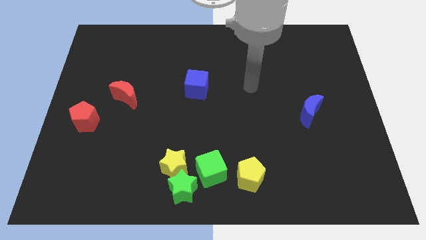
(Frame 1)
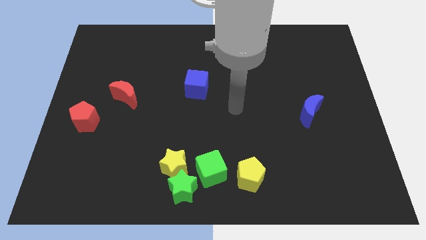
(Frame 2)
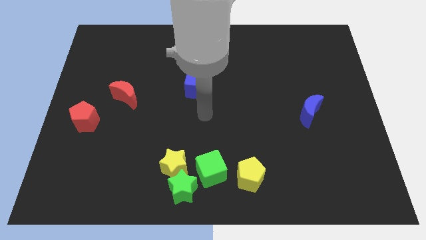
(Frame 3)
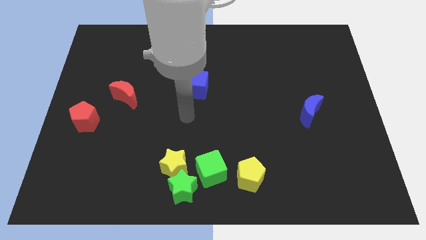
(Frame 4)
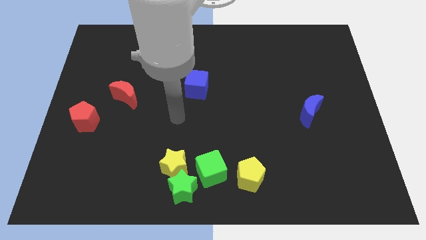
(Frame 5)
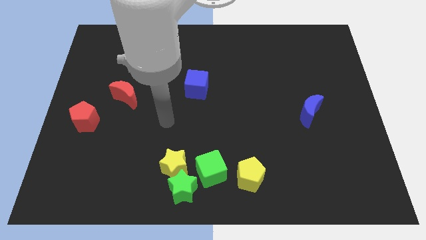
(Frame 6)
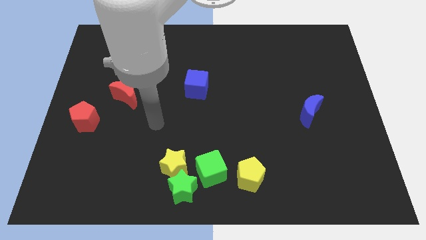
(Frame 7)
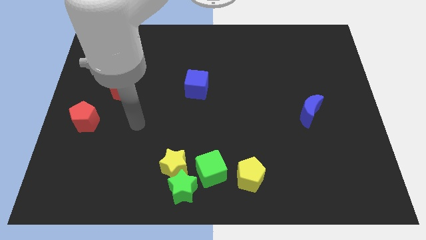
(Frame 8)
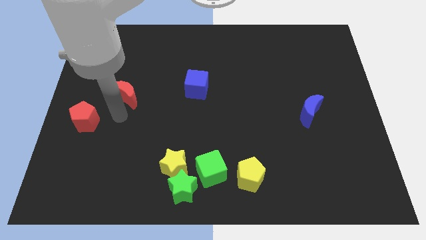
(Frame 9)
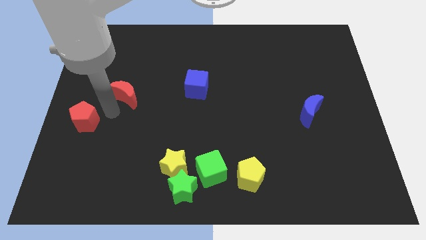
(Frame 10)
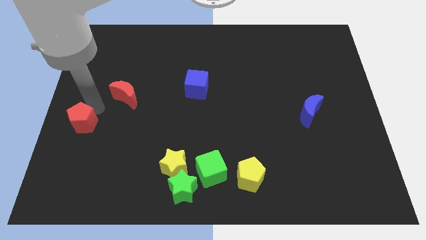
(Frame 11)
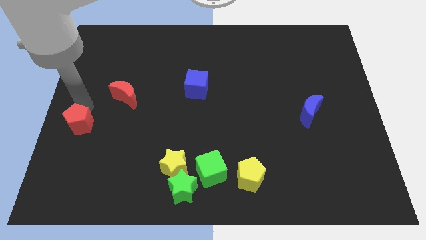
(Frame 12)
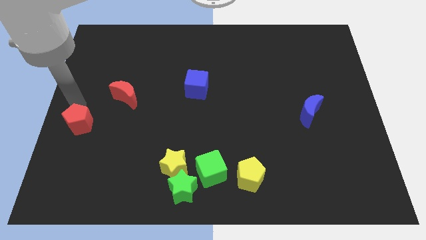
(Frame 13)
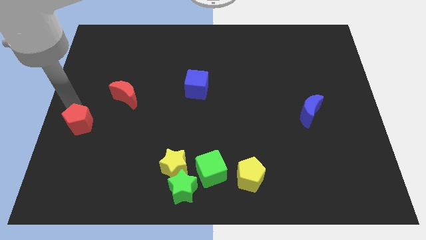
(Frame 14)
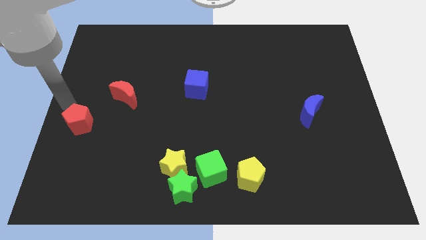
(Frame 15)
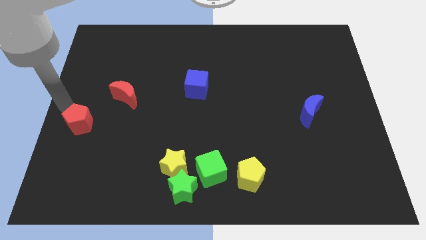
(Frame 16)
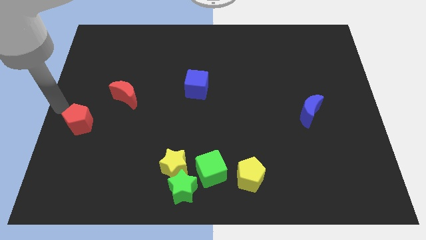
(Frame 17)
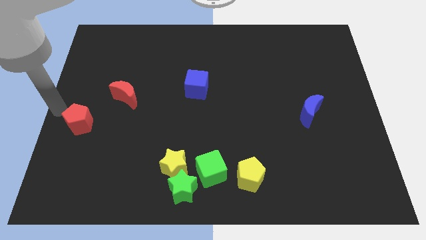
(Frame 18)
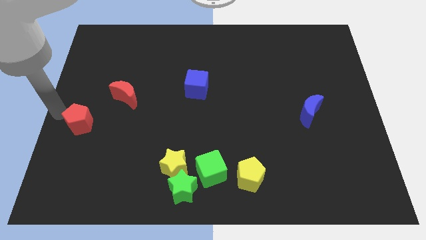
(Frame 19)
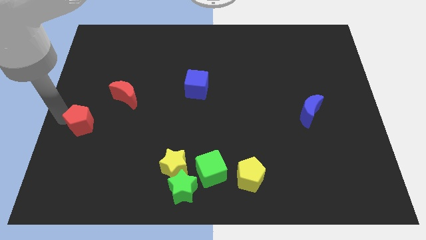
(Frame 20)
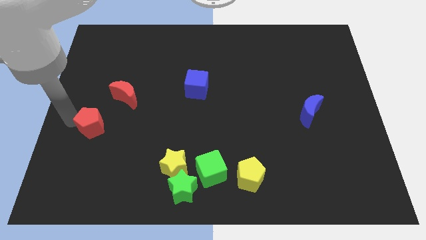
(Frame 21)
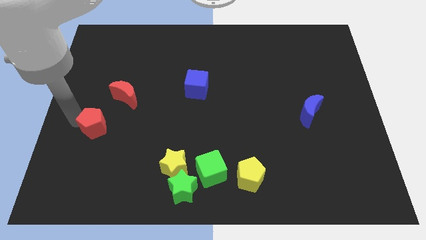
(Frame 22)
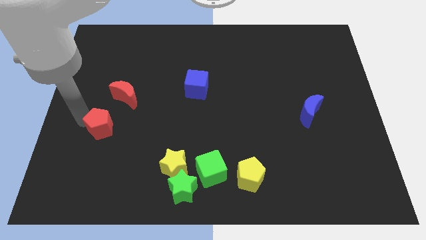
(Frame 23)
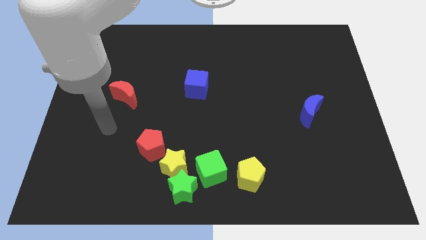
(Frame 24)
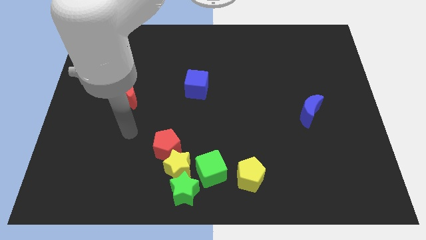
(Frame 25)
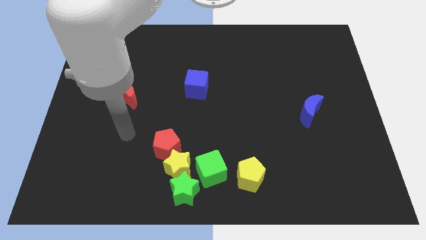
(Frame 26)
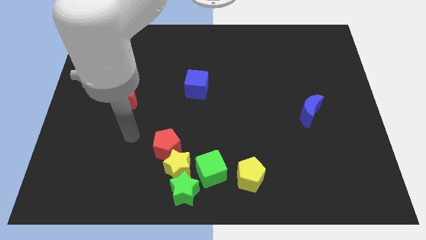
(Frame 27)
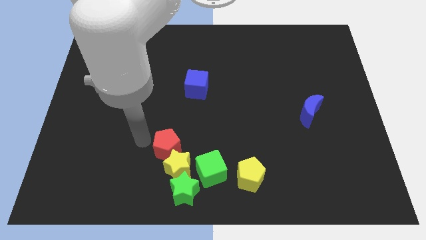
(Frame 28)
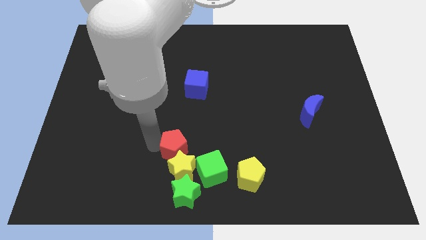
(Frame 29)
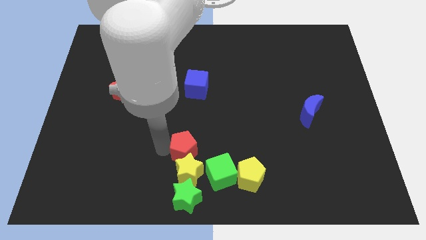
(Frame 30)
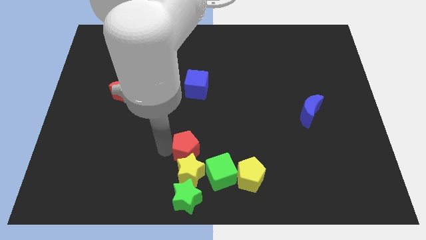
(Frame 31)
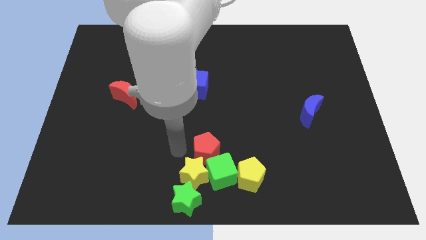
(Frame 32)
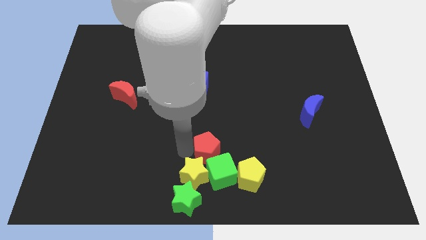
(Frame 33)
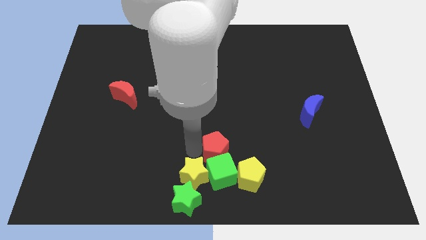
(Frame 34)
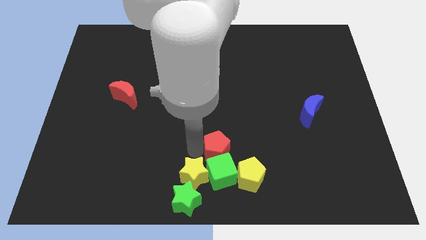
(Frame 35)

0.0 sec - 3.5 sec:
move the red pentagon next to the green cube

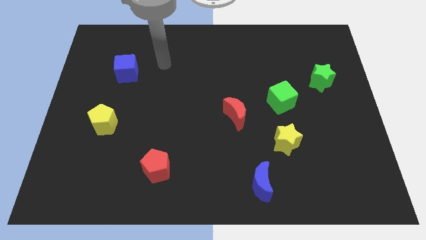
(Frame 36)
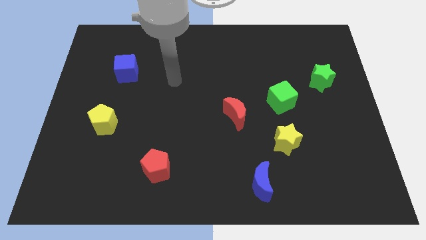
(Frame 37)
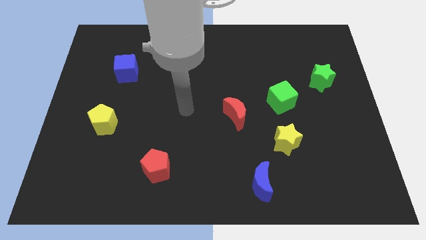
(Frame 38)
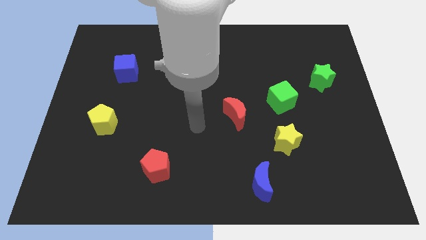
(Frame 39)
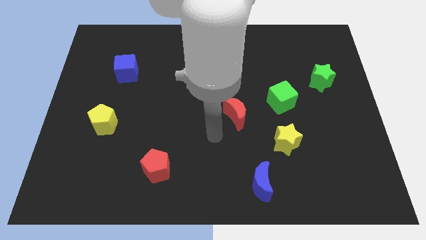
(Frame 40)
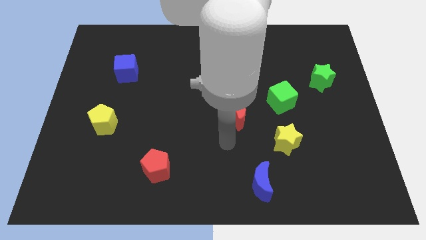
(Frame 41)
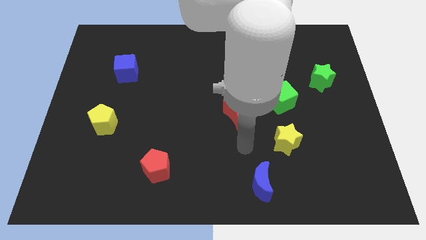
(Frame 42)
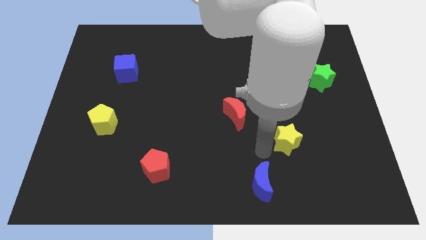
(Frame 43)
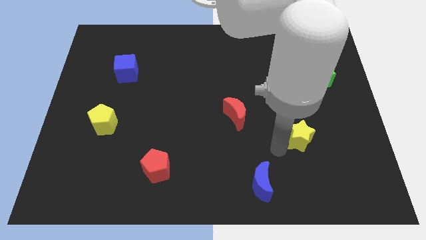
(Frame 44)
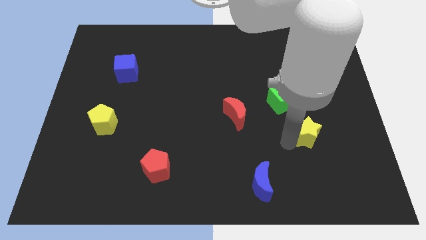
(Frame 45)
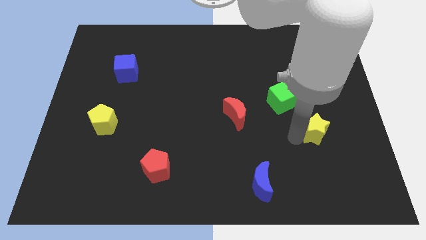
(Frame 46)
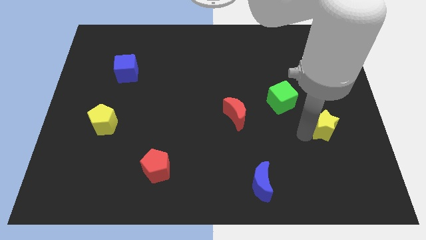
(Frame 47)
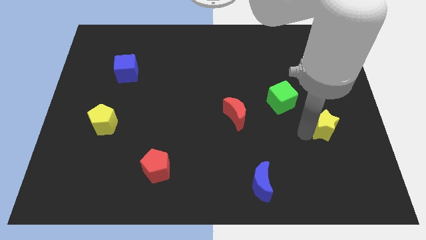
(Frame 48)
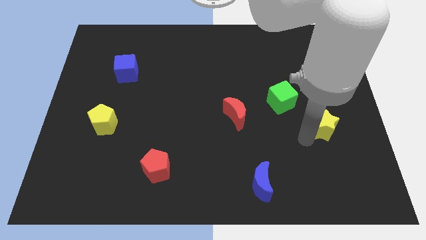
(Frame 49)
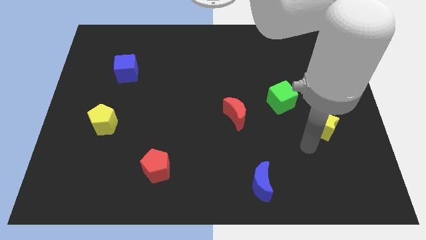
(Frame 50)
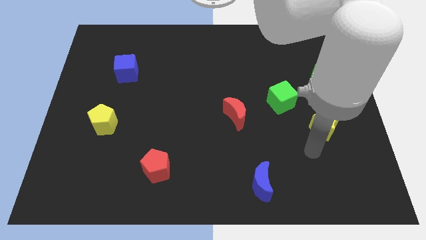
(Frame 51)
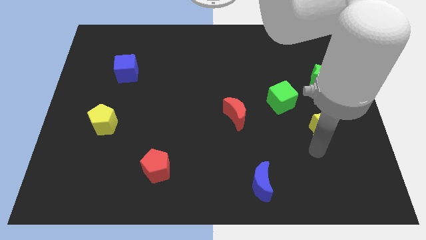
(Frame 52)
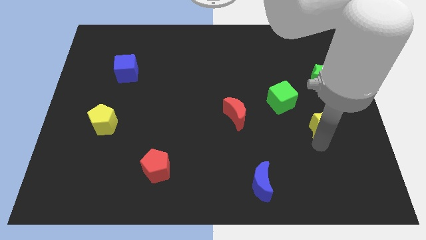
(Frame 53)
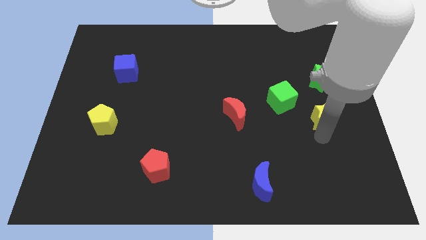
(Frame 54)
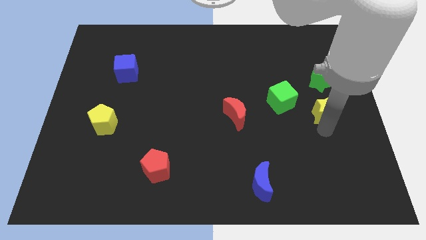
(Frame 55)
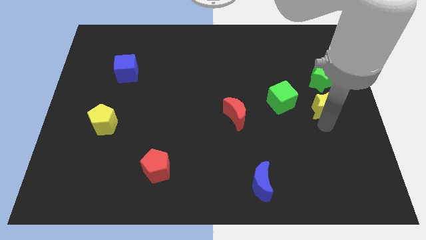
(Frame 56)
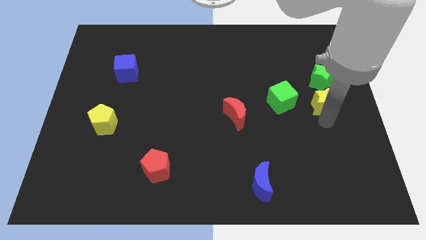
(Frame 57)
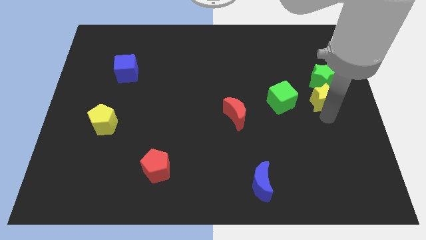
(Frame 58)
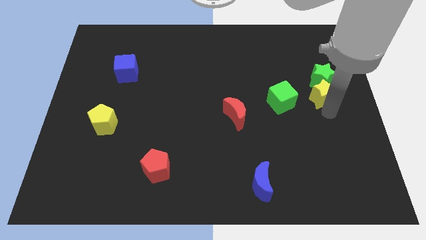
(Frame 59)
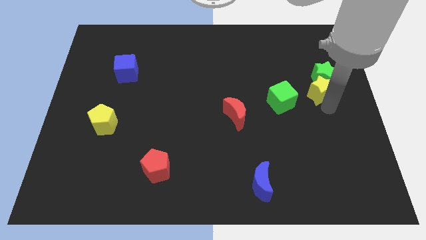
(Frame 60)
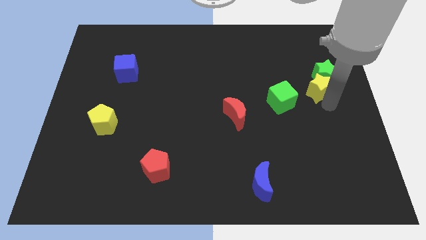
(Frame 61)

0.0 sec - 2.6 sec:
move the yellow star to the green star

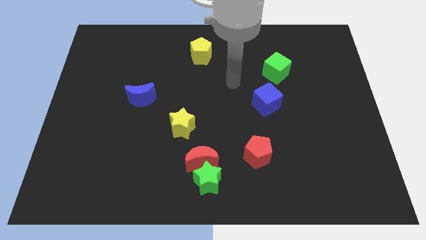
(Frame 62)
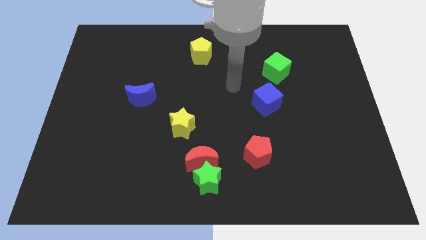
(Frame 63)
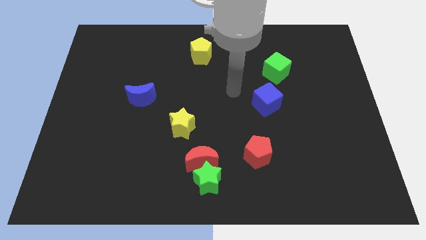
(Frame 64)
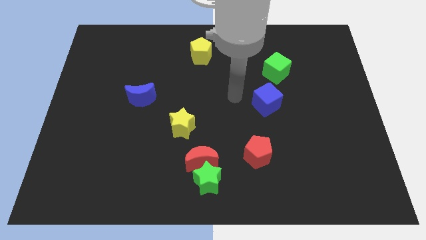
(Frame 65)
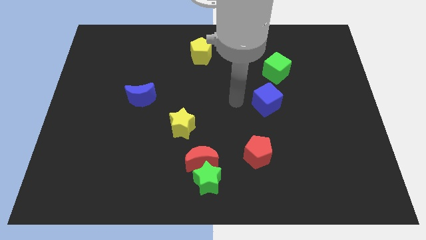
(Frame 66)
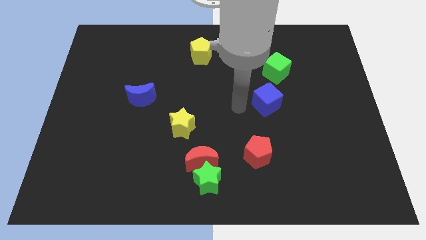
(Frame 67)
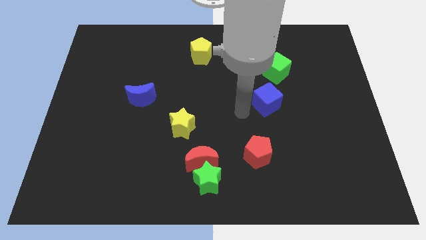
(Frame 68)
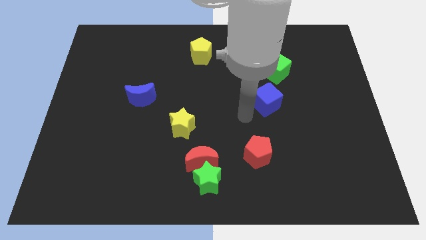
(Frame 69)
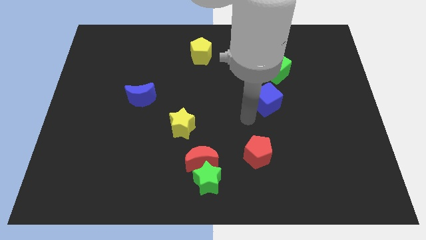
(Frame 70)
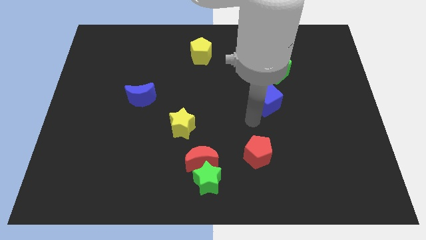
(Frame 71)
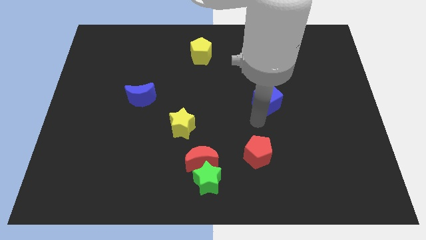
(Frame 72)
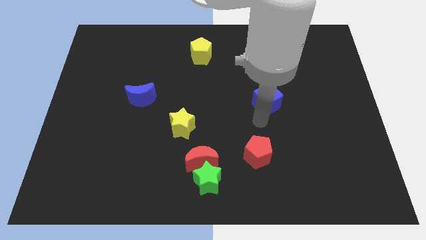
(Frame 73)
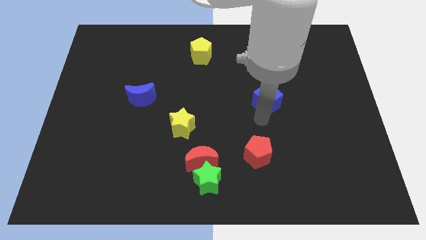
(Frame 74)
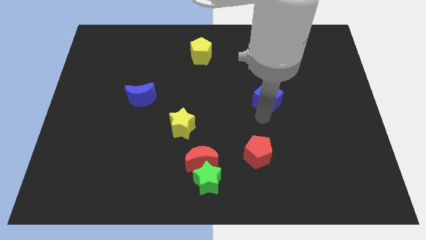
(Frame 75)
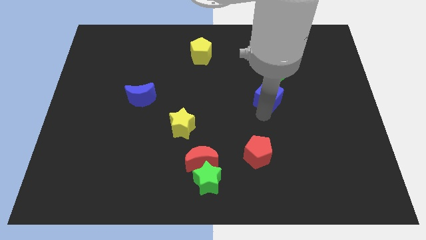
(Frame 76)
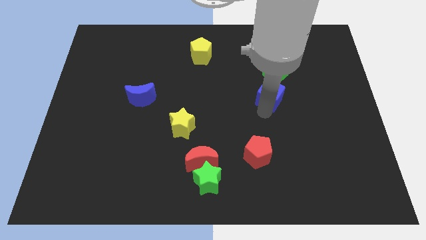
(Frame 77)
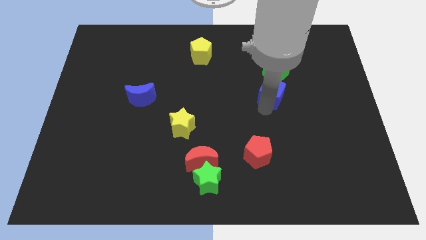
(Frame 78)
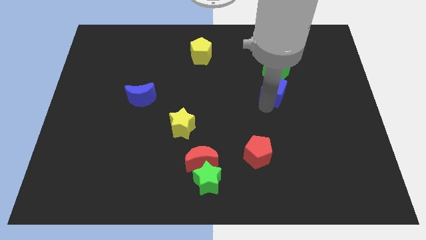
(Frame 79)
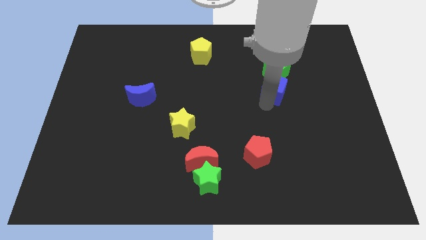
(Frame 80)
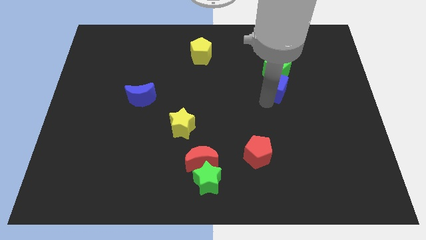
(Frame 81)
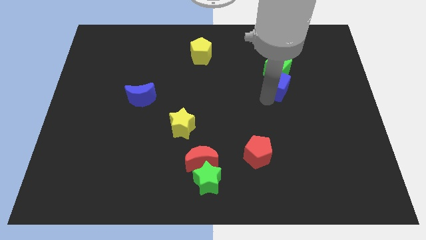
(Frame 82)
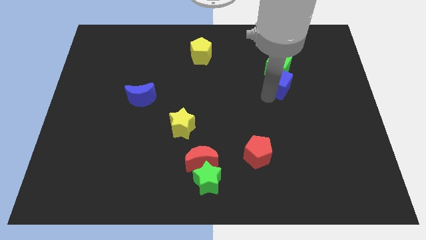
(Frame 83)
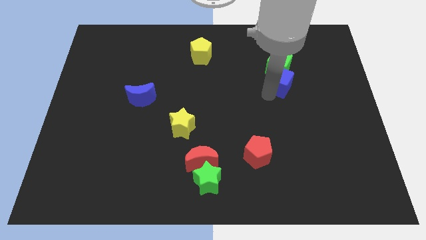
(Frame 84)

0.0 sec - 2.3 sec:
move the blue cube close to the green cube

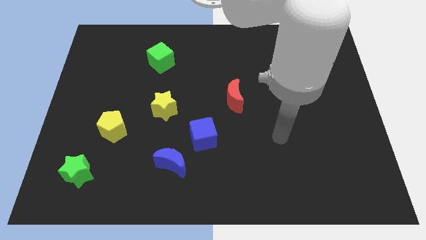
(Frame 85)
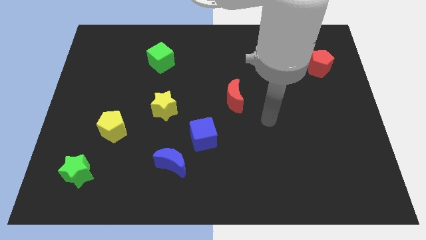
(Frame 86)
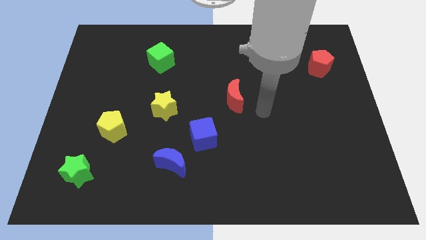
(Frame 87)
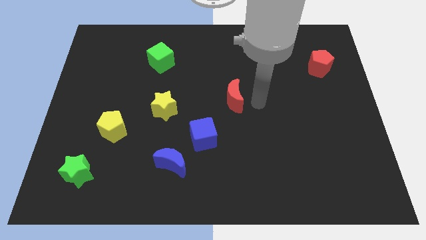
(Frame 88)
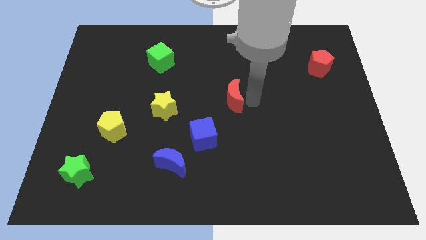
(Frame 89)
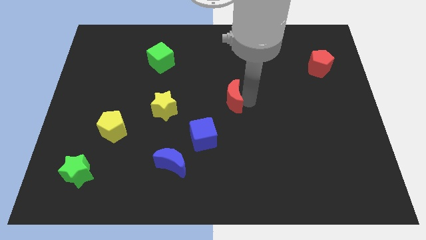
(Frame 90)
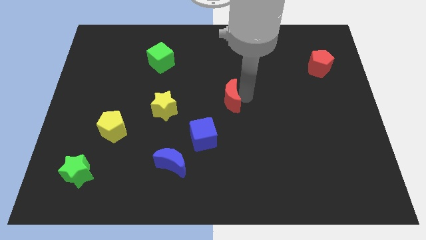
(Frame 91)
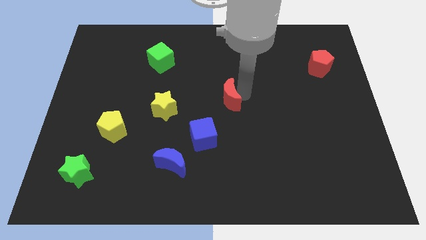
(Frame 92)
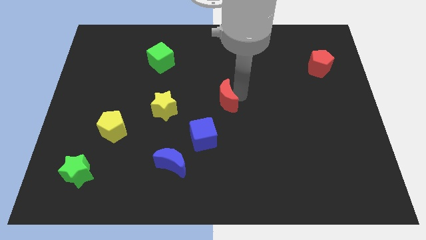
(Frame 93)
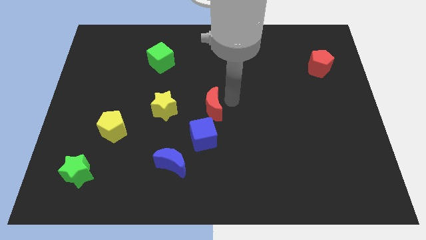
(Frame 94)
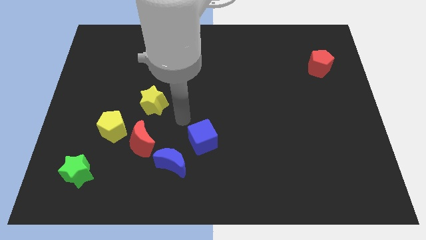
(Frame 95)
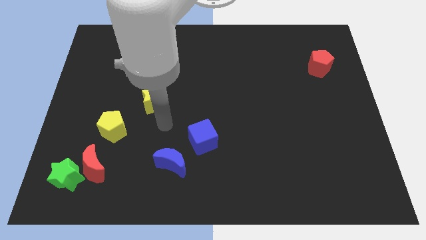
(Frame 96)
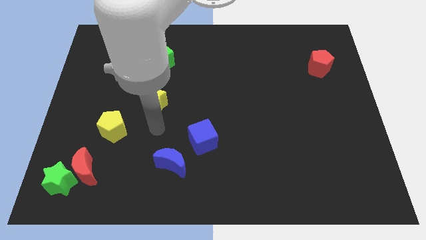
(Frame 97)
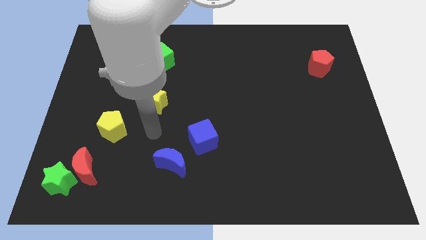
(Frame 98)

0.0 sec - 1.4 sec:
put the red moon close to the green star
